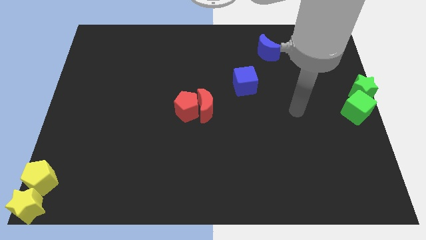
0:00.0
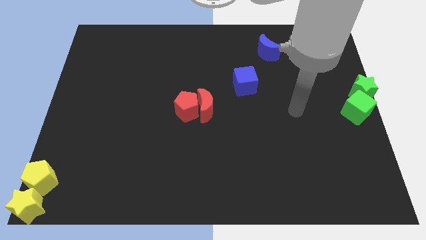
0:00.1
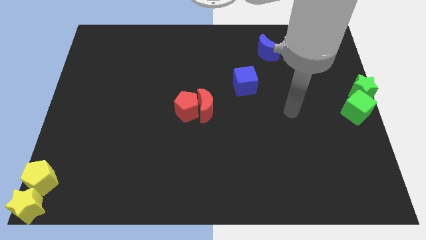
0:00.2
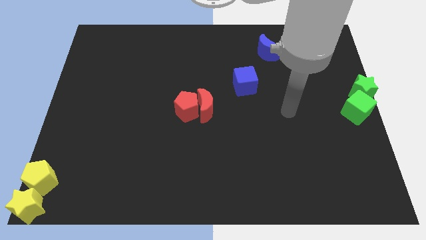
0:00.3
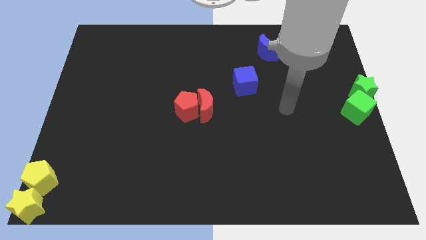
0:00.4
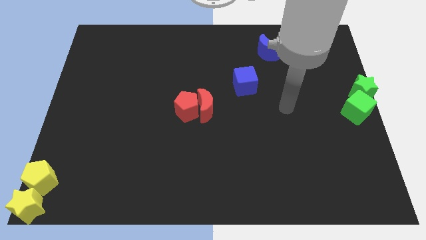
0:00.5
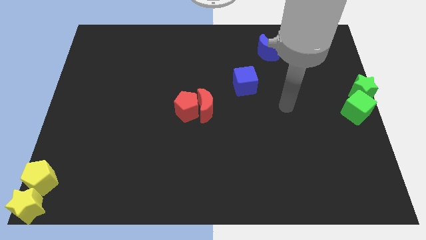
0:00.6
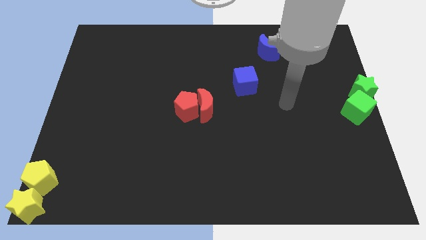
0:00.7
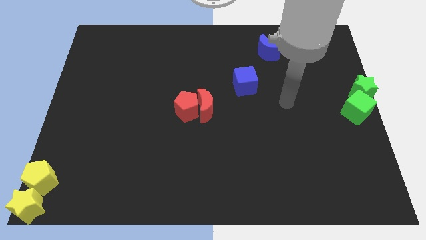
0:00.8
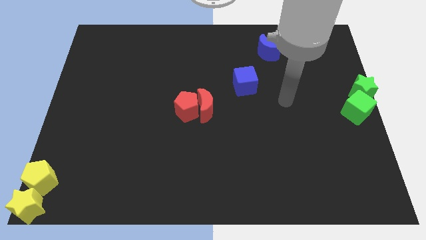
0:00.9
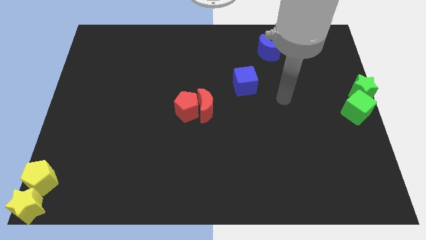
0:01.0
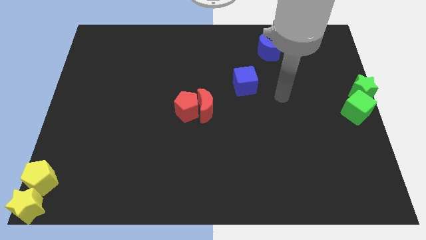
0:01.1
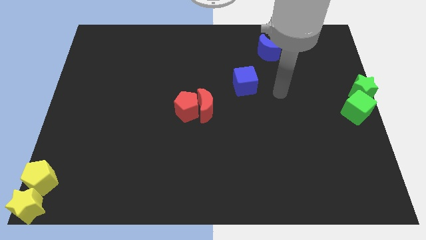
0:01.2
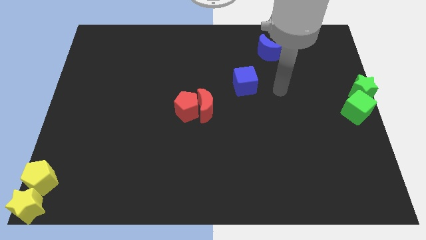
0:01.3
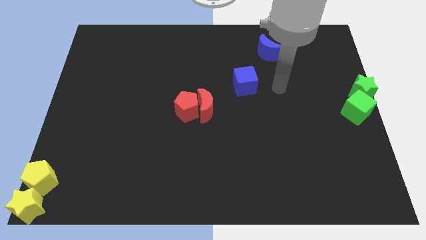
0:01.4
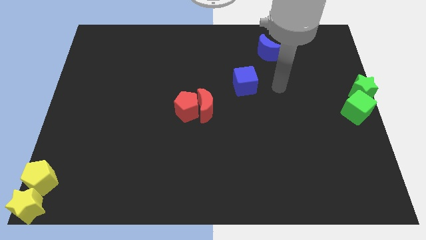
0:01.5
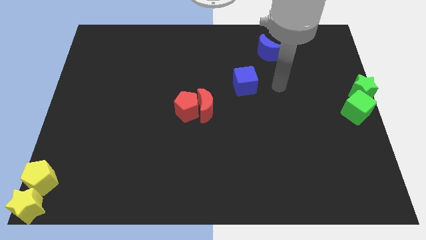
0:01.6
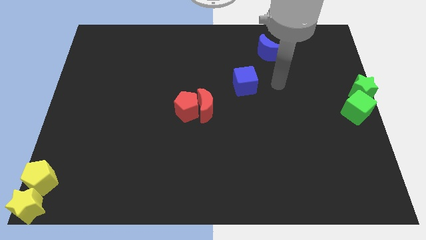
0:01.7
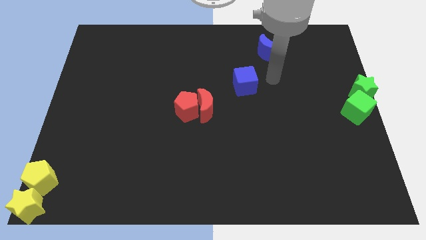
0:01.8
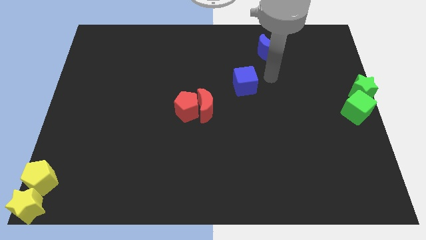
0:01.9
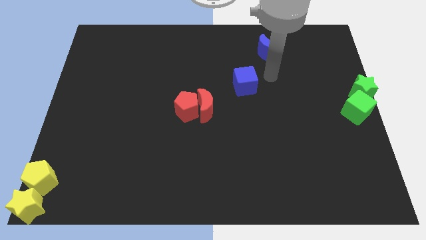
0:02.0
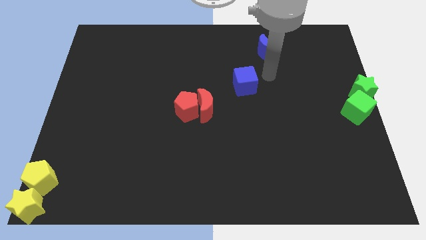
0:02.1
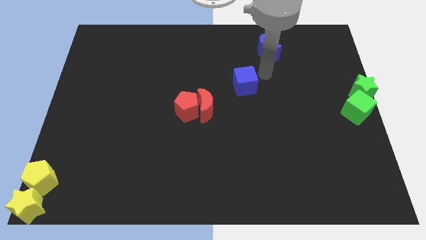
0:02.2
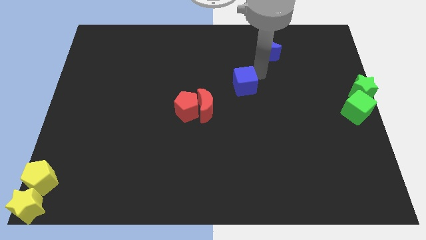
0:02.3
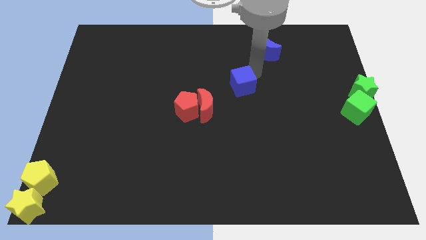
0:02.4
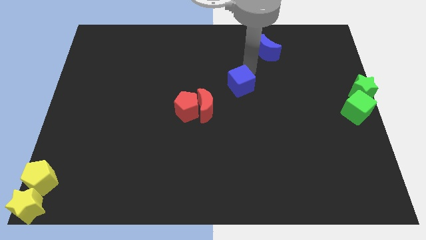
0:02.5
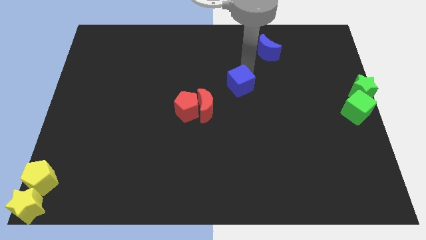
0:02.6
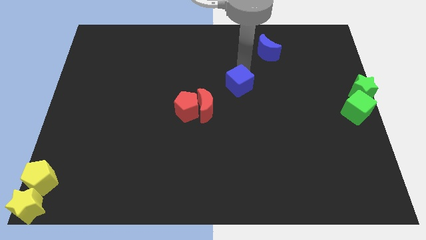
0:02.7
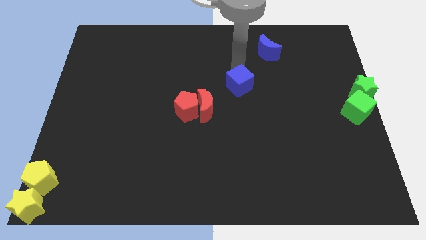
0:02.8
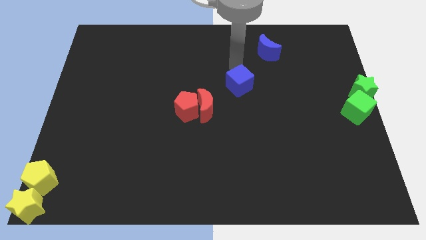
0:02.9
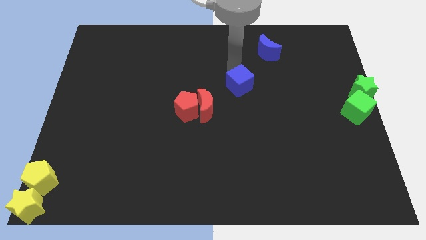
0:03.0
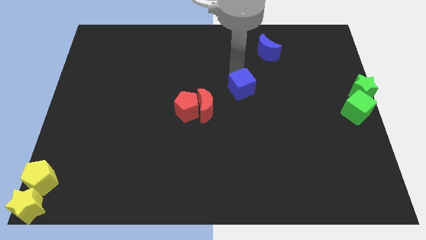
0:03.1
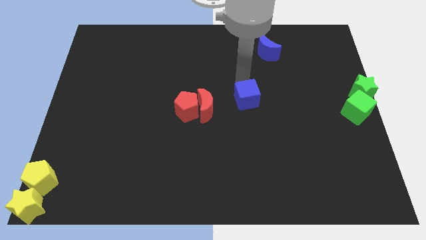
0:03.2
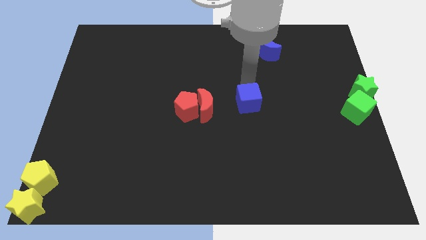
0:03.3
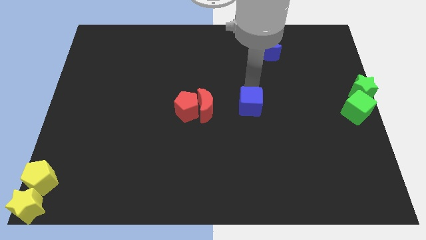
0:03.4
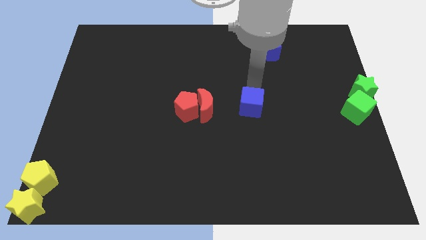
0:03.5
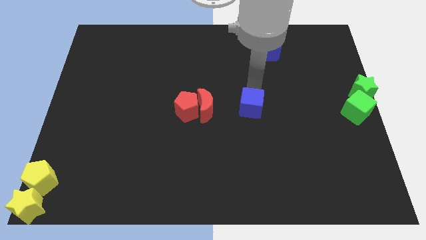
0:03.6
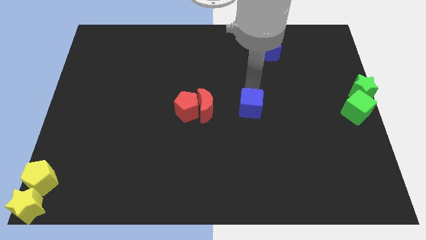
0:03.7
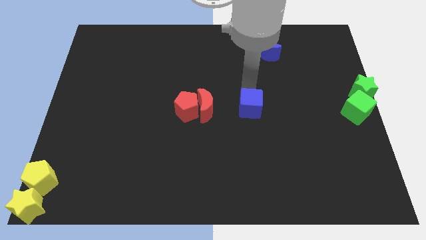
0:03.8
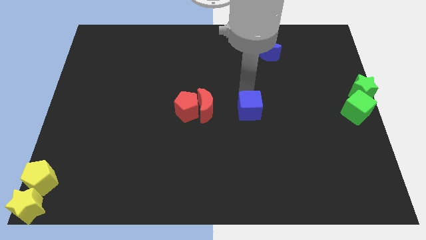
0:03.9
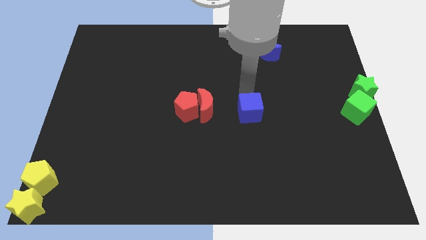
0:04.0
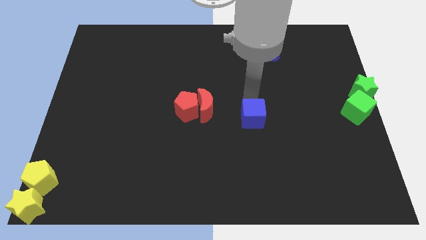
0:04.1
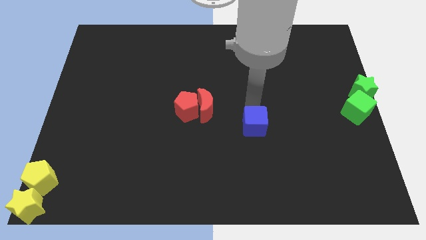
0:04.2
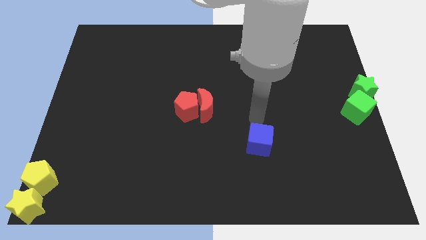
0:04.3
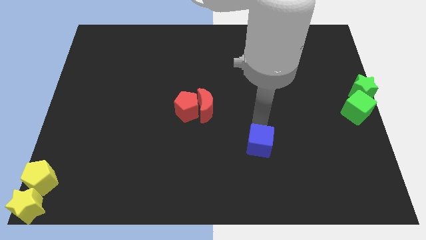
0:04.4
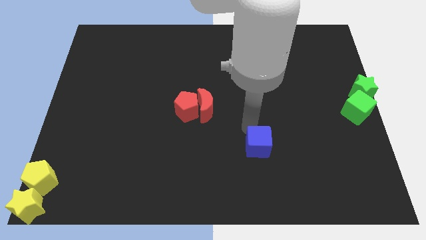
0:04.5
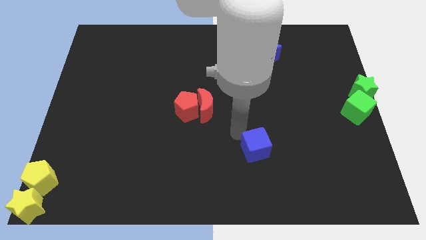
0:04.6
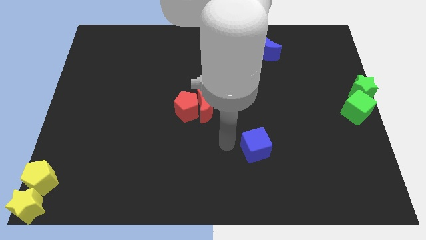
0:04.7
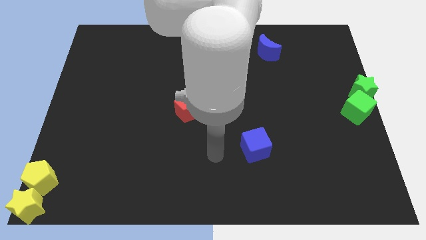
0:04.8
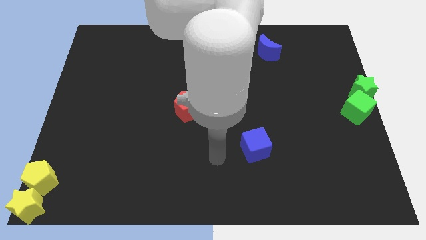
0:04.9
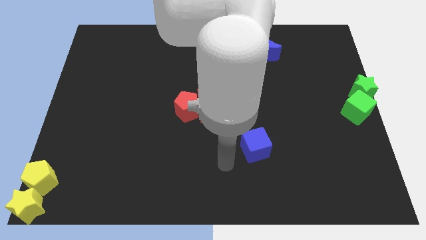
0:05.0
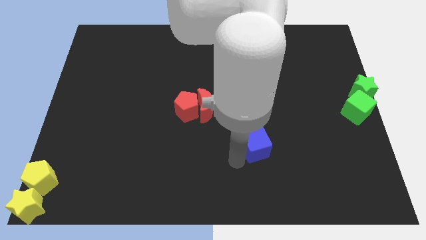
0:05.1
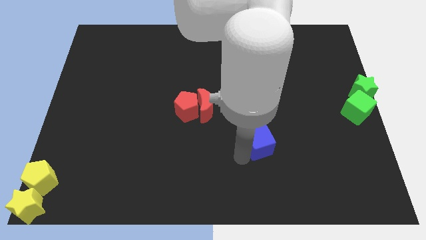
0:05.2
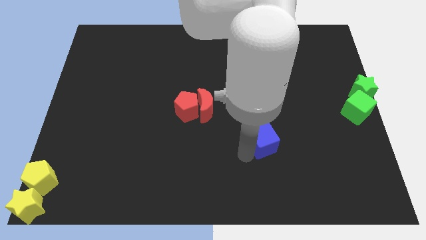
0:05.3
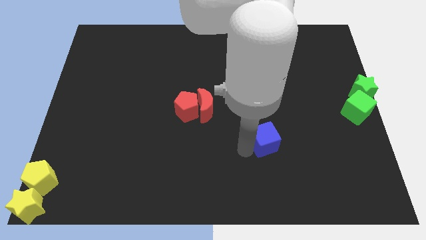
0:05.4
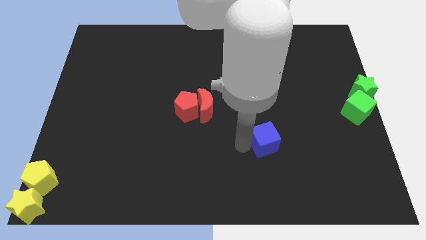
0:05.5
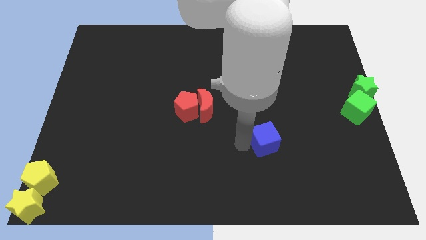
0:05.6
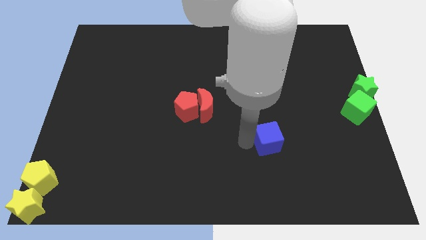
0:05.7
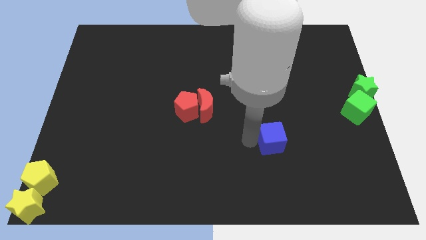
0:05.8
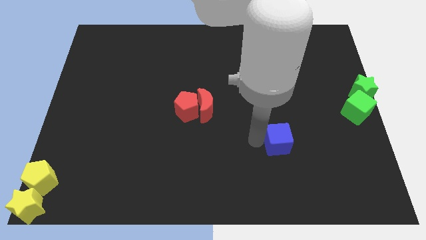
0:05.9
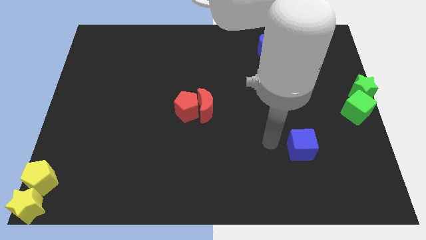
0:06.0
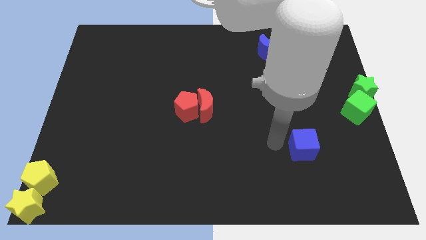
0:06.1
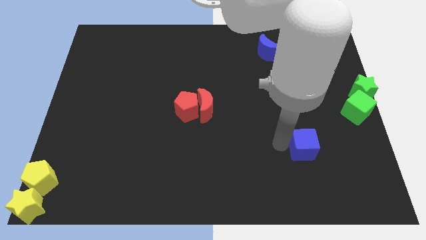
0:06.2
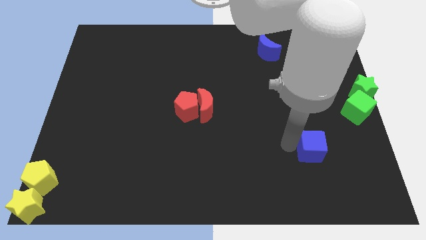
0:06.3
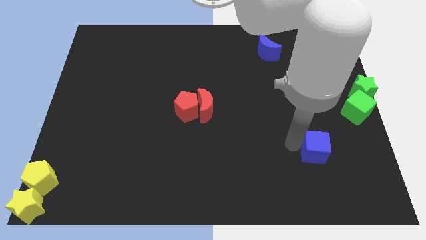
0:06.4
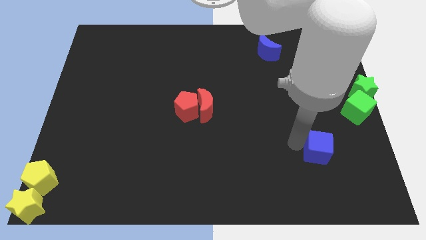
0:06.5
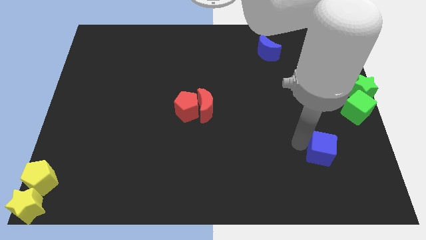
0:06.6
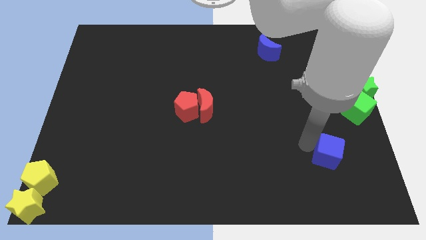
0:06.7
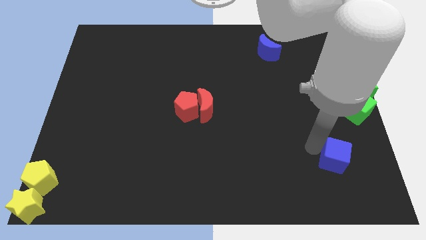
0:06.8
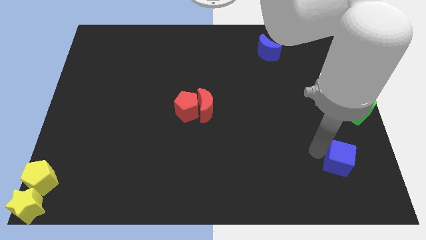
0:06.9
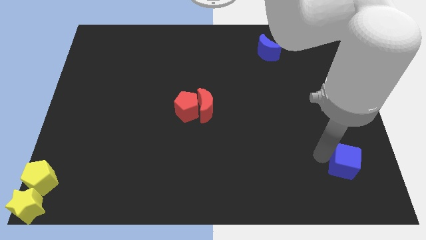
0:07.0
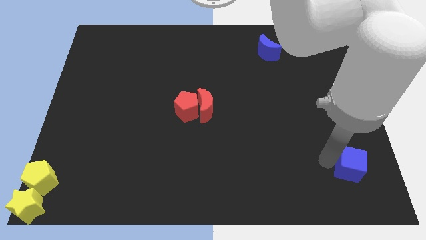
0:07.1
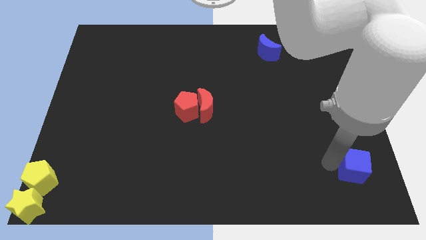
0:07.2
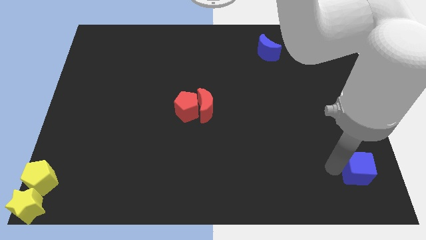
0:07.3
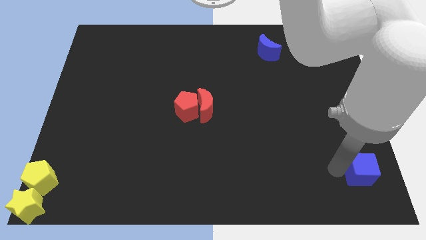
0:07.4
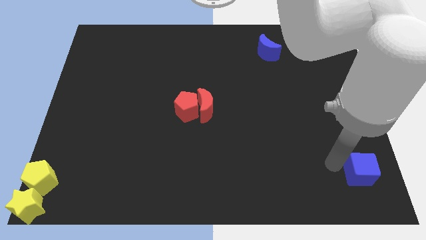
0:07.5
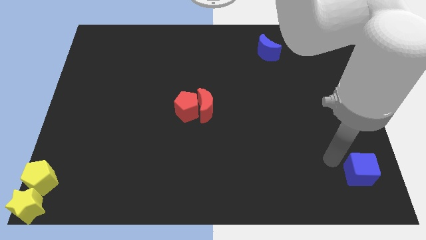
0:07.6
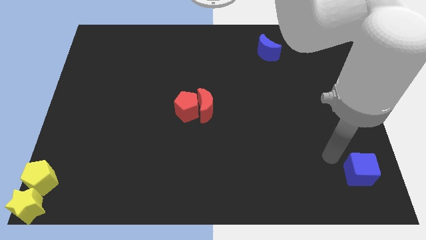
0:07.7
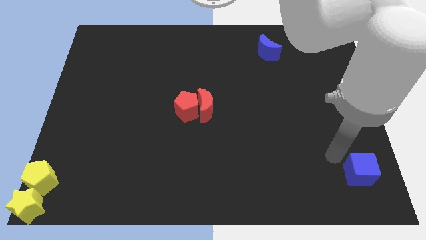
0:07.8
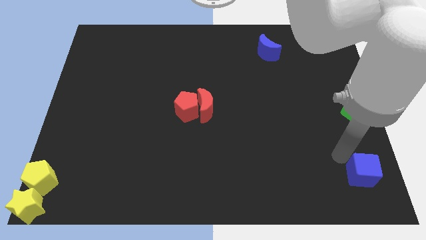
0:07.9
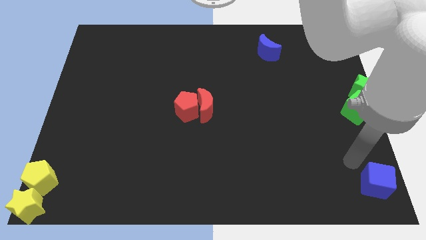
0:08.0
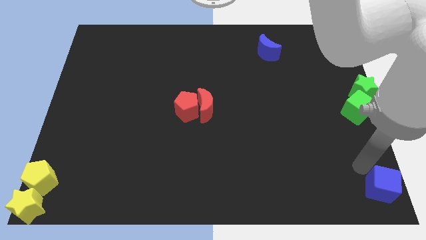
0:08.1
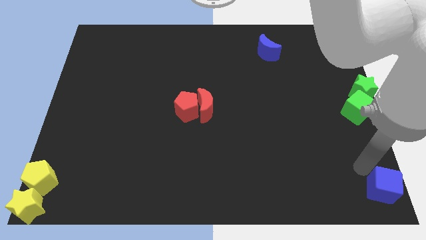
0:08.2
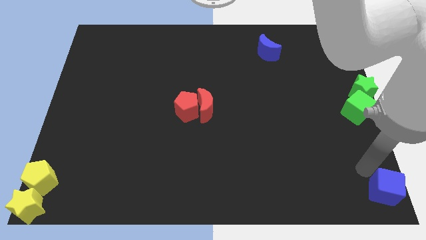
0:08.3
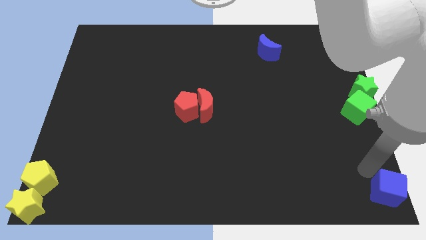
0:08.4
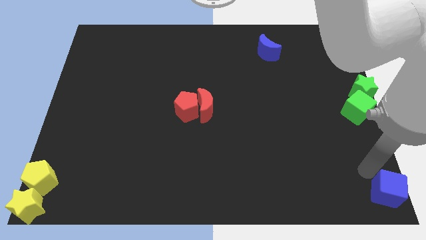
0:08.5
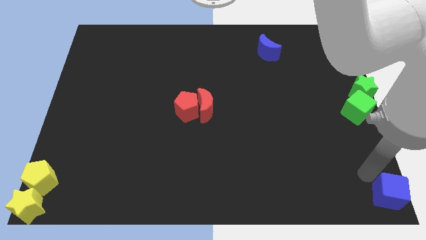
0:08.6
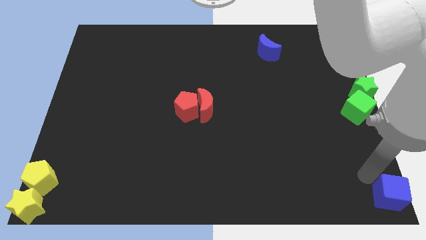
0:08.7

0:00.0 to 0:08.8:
place the blue cube below the green cube
